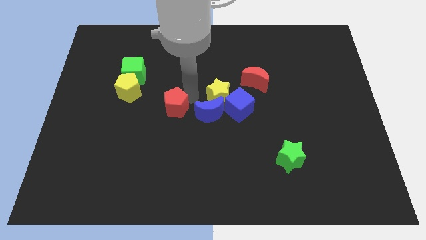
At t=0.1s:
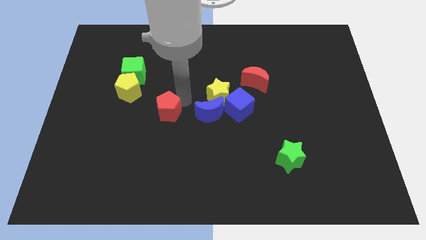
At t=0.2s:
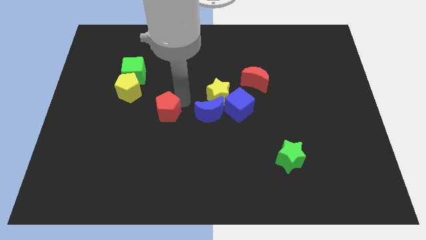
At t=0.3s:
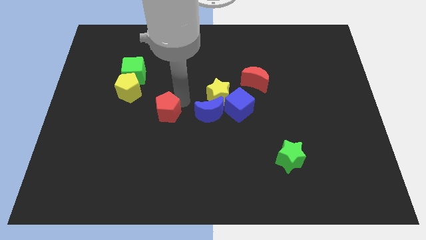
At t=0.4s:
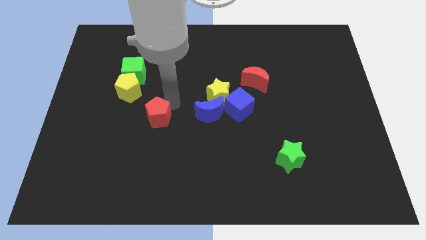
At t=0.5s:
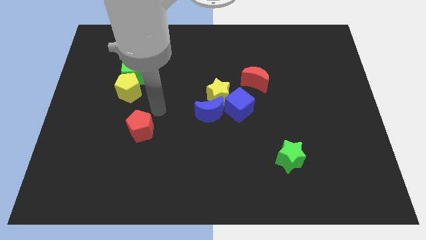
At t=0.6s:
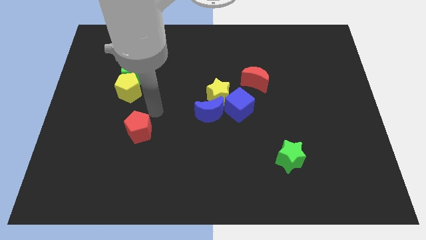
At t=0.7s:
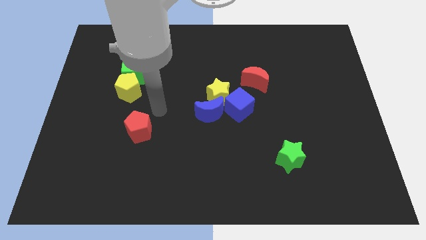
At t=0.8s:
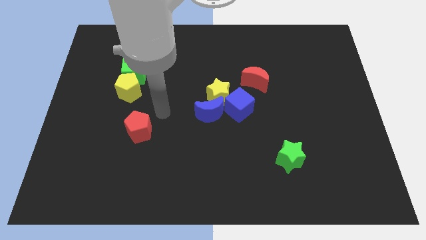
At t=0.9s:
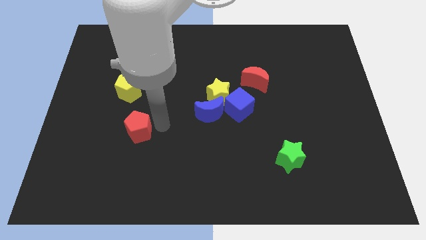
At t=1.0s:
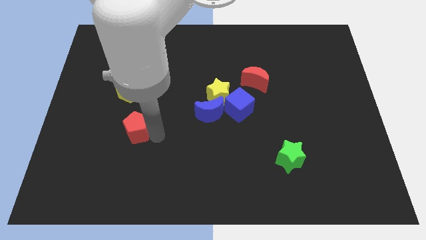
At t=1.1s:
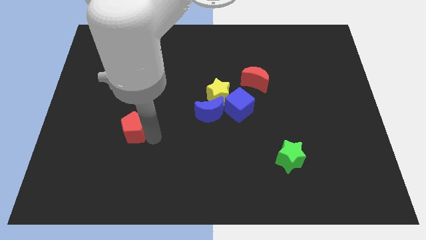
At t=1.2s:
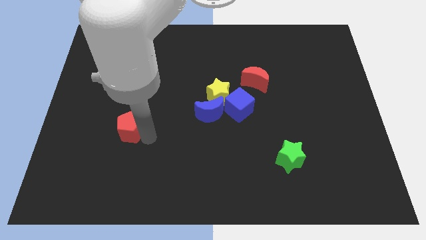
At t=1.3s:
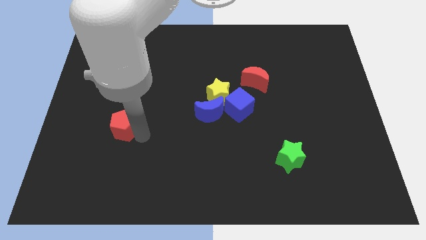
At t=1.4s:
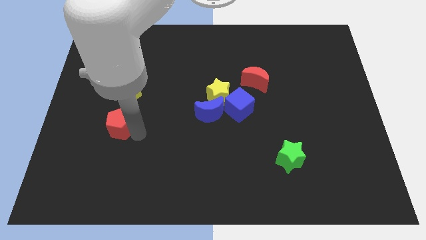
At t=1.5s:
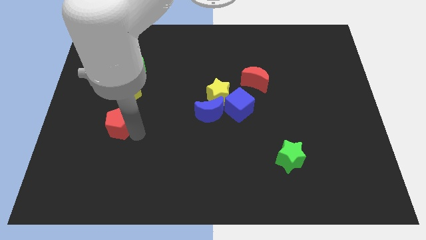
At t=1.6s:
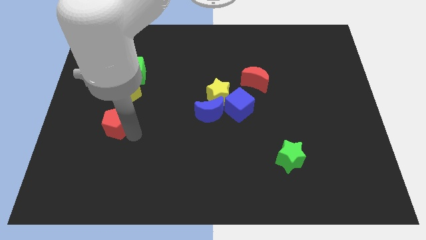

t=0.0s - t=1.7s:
place the red pentagon below the yellow pentagon

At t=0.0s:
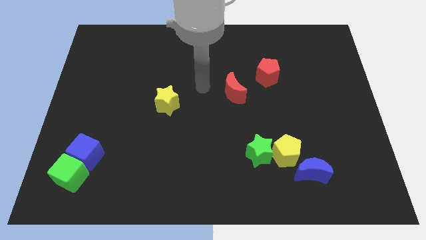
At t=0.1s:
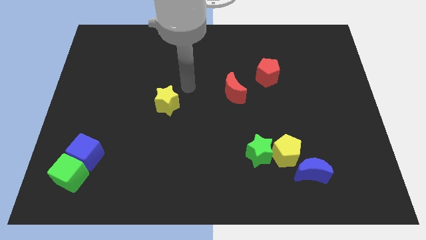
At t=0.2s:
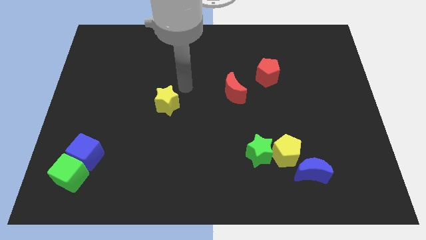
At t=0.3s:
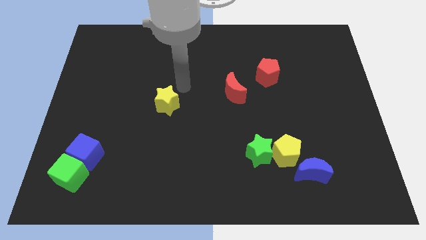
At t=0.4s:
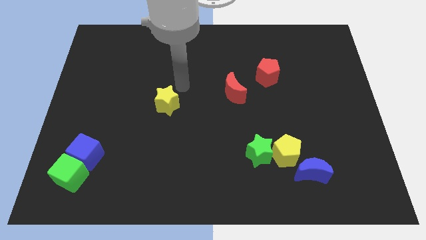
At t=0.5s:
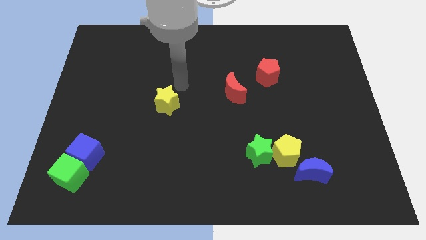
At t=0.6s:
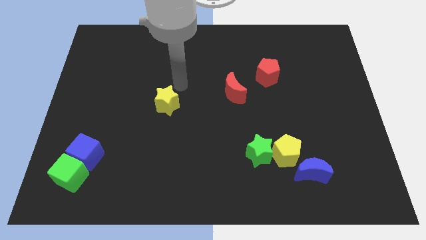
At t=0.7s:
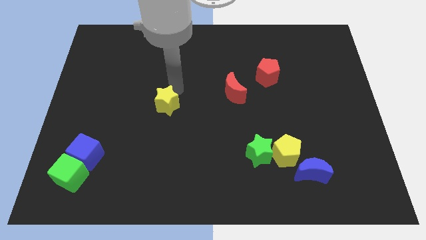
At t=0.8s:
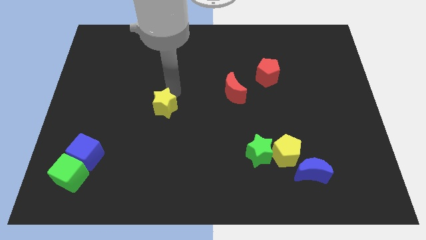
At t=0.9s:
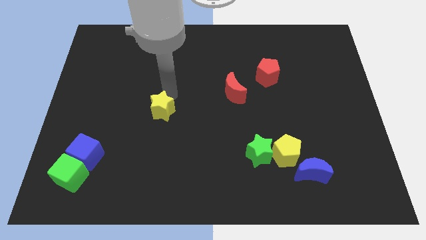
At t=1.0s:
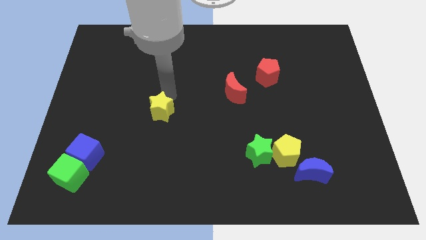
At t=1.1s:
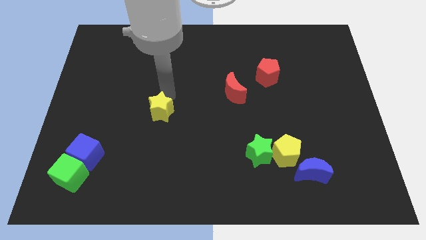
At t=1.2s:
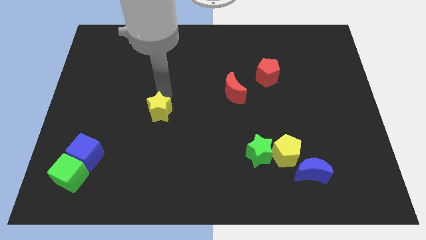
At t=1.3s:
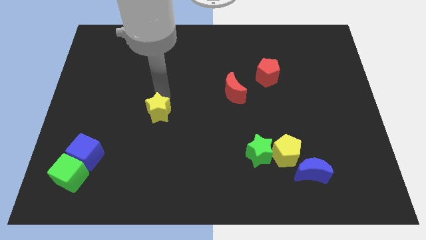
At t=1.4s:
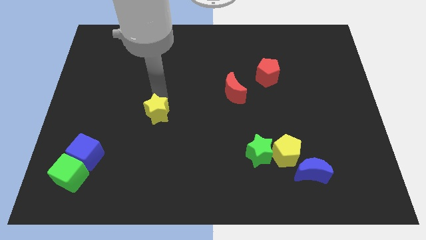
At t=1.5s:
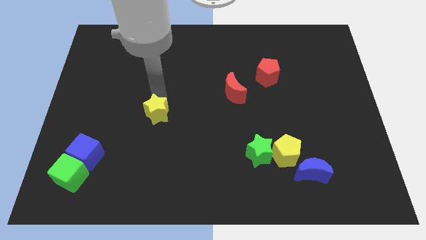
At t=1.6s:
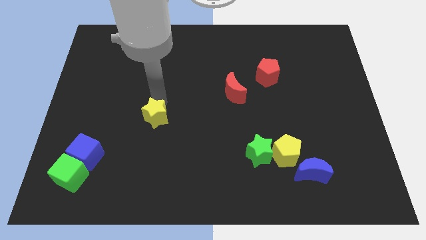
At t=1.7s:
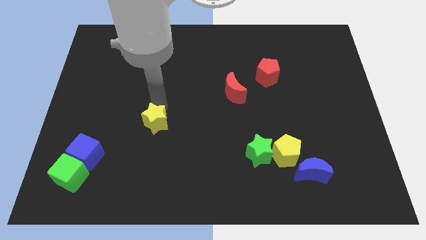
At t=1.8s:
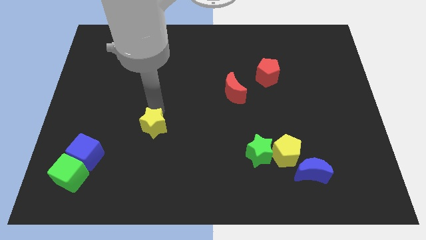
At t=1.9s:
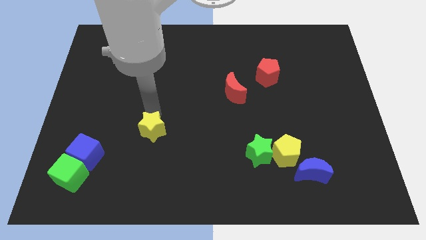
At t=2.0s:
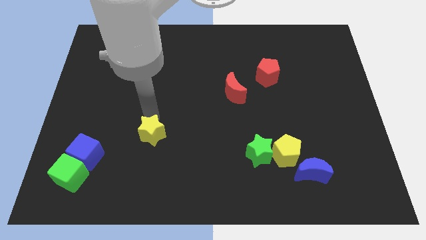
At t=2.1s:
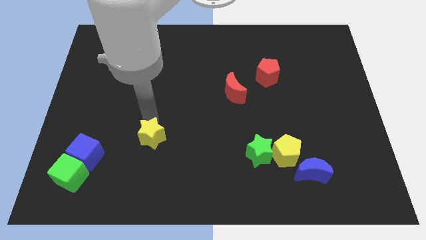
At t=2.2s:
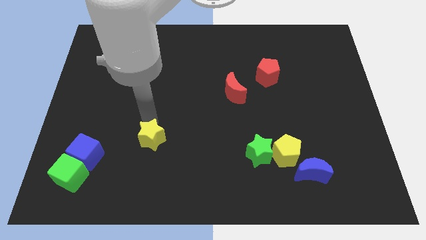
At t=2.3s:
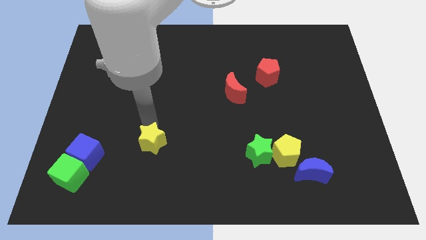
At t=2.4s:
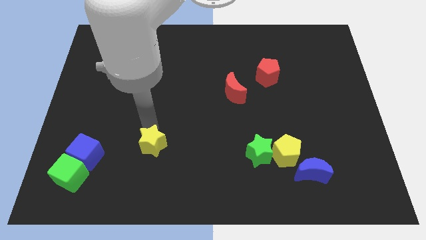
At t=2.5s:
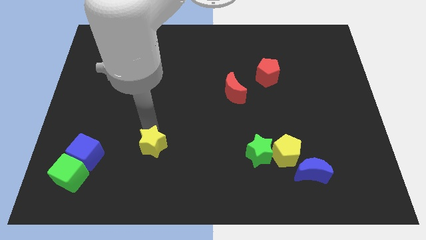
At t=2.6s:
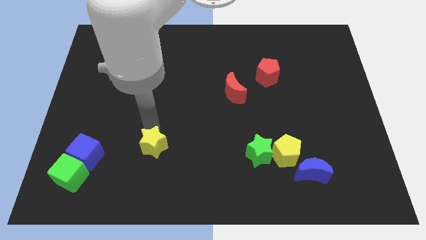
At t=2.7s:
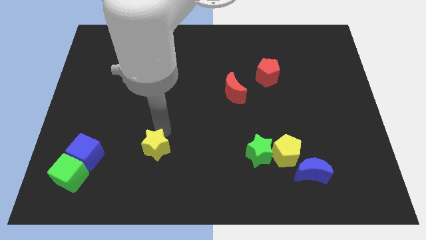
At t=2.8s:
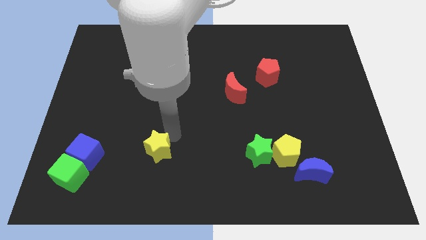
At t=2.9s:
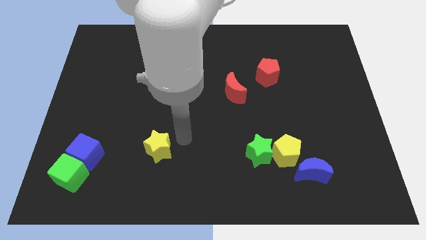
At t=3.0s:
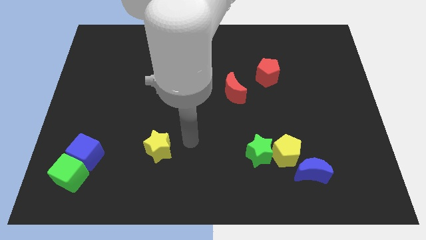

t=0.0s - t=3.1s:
move the yellow star to the right of the blue cube

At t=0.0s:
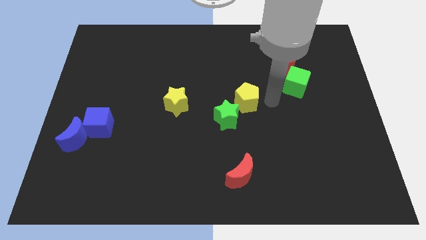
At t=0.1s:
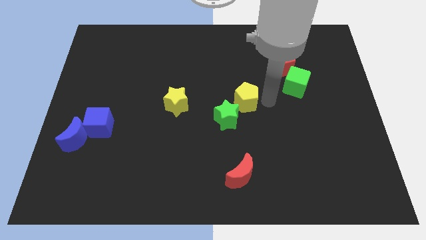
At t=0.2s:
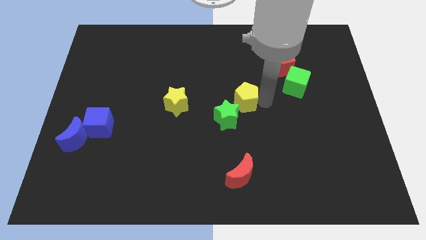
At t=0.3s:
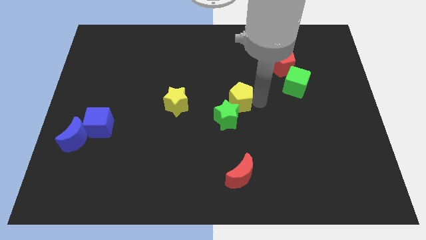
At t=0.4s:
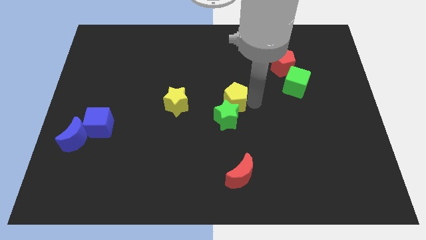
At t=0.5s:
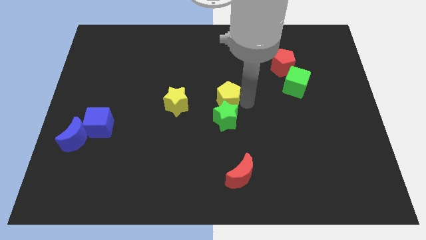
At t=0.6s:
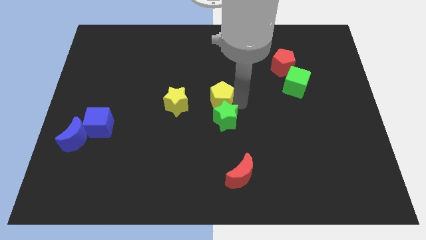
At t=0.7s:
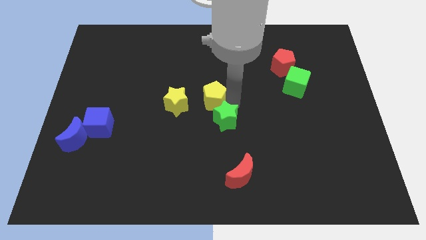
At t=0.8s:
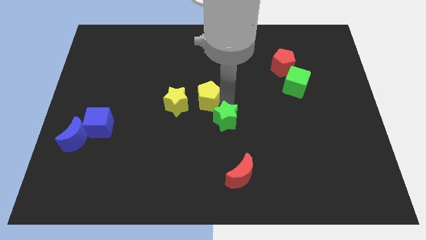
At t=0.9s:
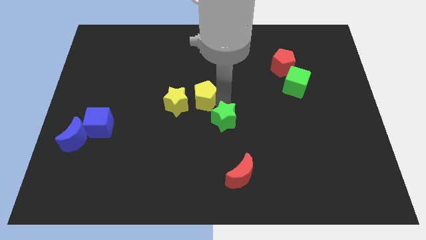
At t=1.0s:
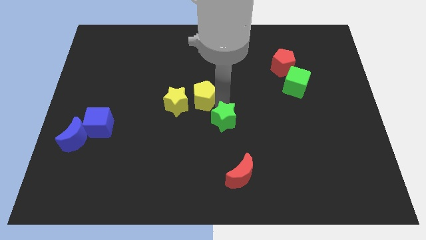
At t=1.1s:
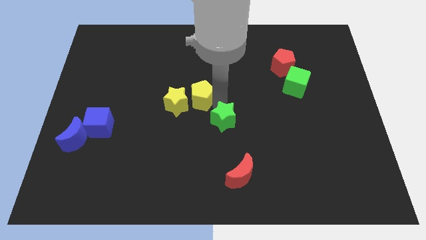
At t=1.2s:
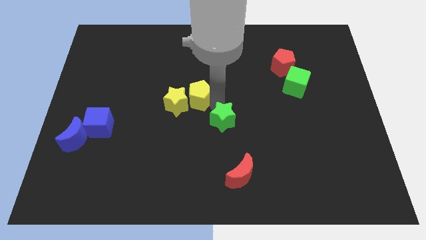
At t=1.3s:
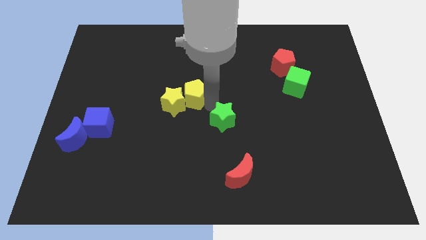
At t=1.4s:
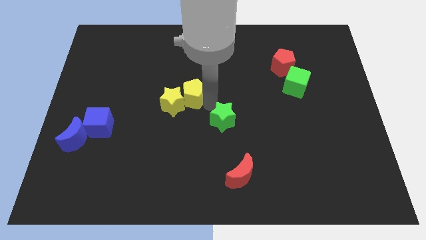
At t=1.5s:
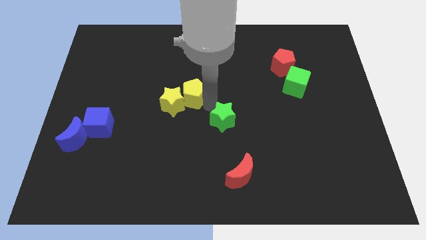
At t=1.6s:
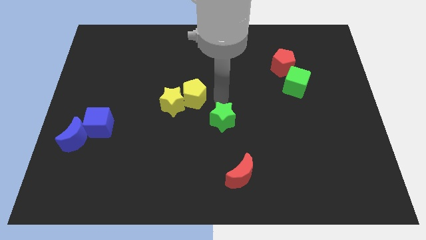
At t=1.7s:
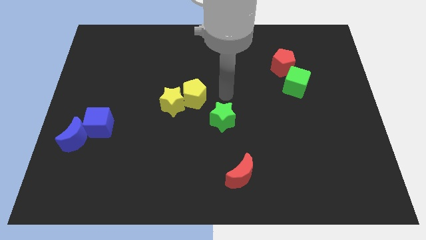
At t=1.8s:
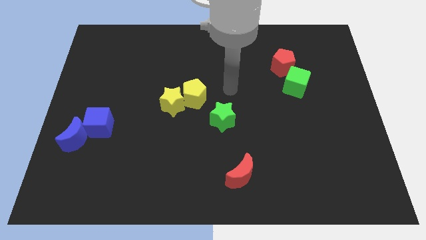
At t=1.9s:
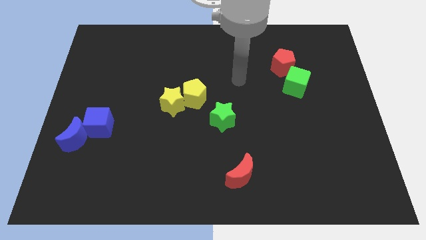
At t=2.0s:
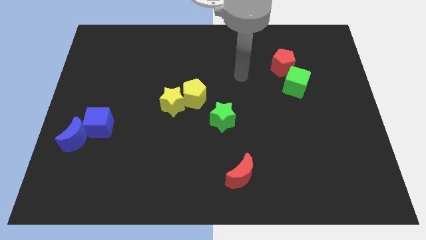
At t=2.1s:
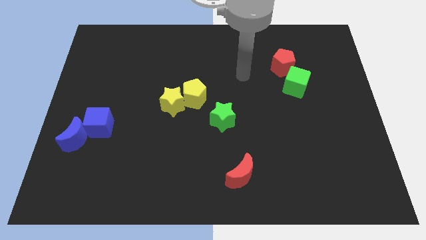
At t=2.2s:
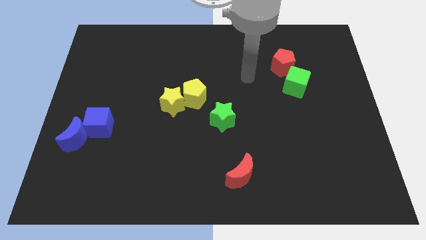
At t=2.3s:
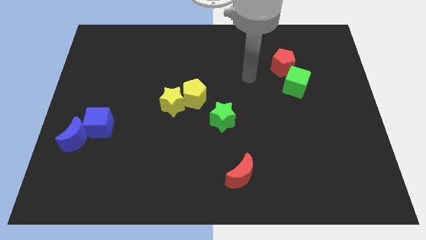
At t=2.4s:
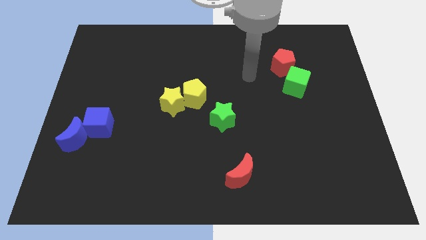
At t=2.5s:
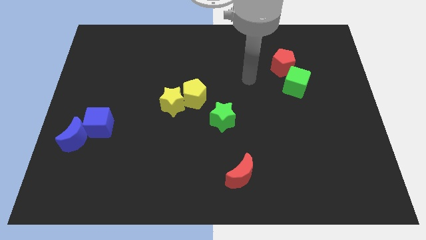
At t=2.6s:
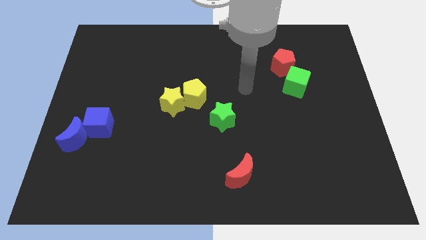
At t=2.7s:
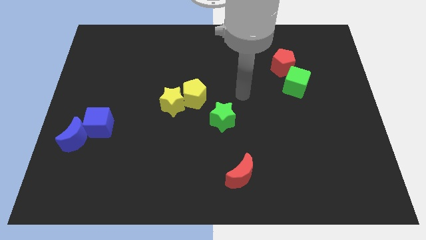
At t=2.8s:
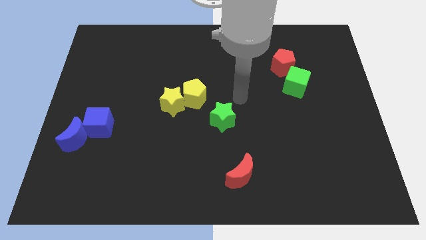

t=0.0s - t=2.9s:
push the yellow pentagon into the yellow star

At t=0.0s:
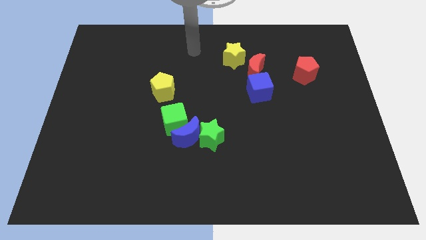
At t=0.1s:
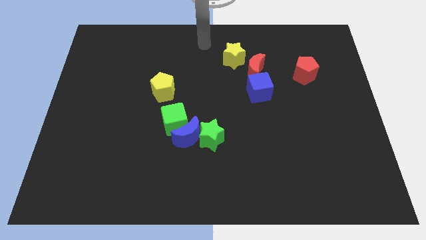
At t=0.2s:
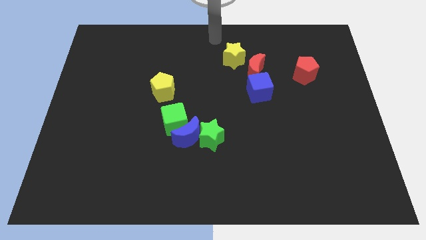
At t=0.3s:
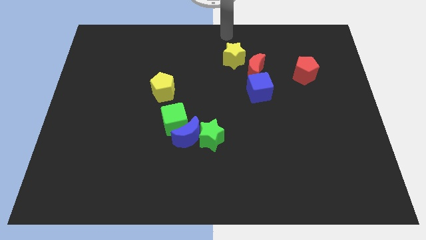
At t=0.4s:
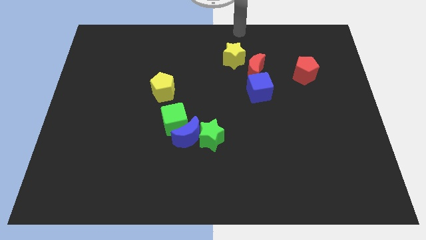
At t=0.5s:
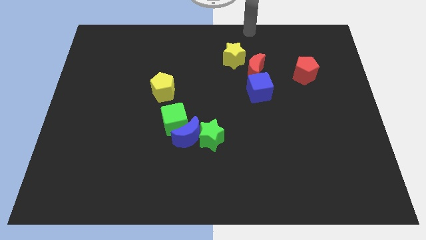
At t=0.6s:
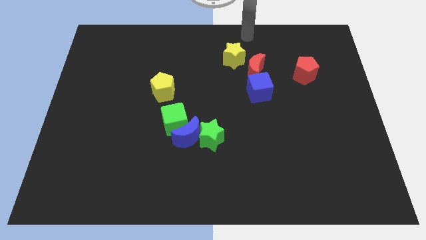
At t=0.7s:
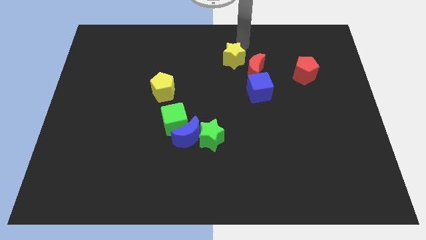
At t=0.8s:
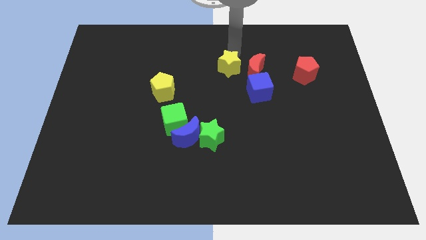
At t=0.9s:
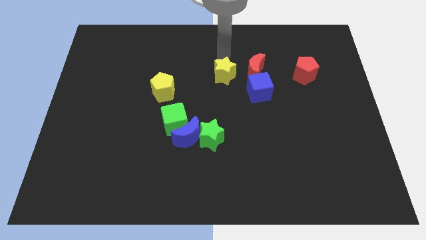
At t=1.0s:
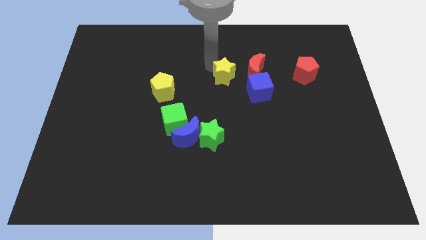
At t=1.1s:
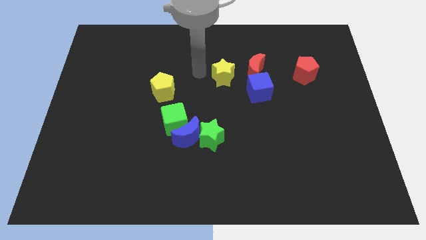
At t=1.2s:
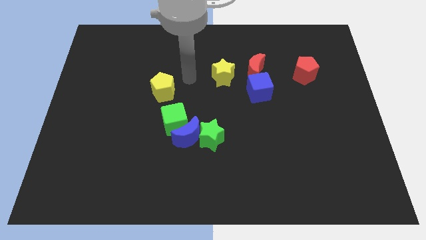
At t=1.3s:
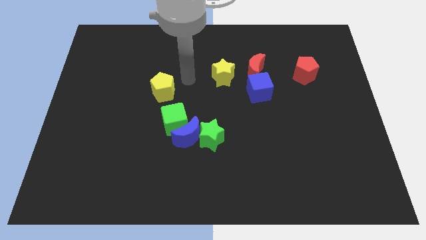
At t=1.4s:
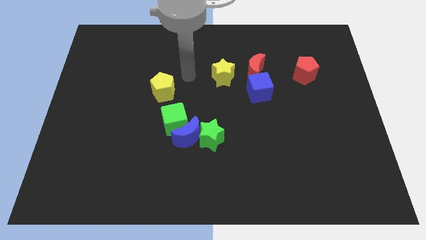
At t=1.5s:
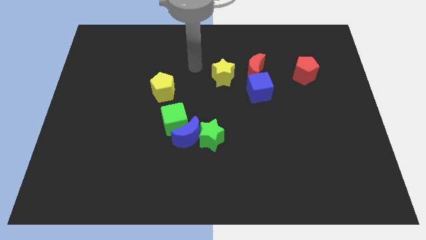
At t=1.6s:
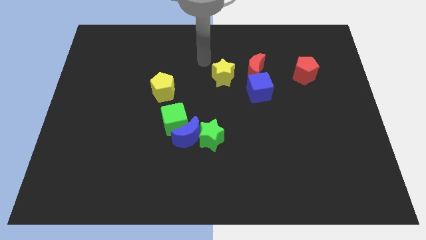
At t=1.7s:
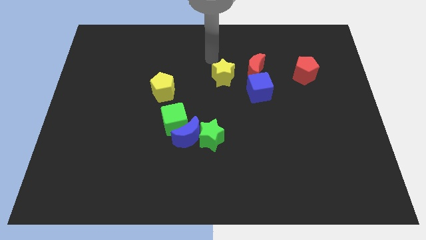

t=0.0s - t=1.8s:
place the yellow star to the left of red moon
